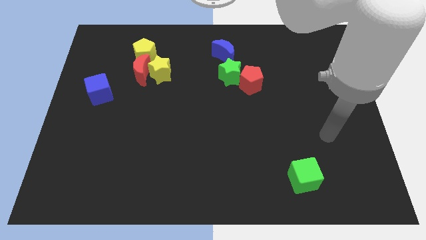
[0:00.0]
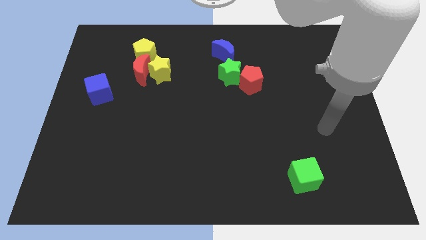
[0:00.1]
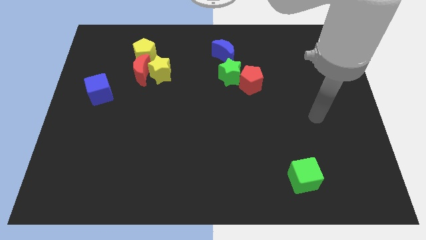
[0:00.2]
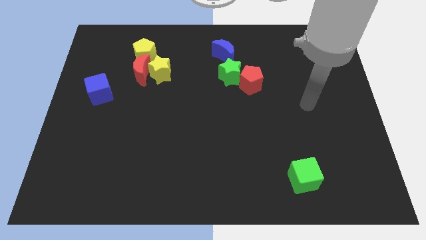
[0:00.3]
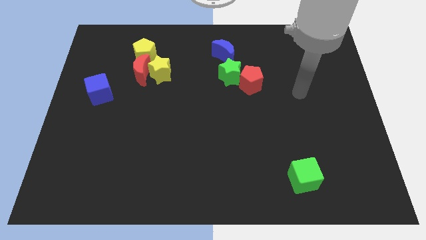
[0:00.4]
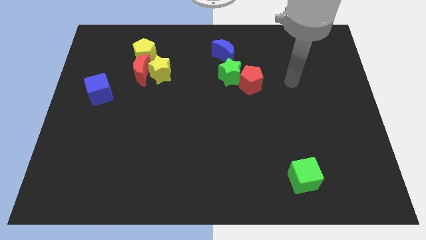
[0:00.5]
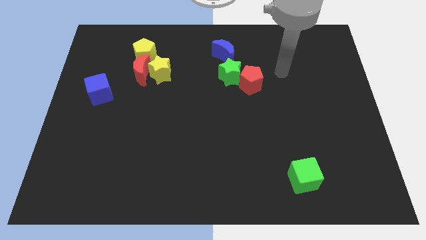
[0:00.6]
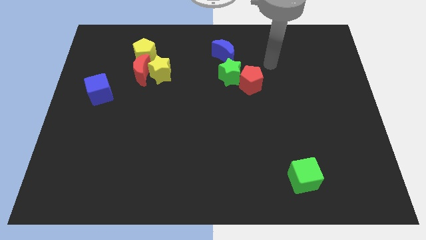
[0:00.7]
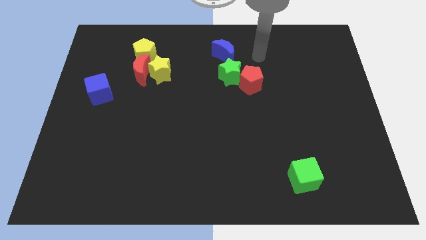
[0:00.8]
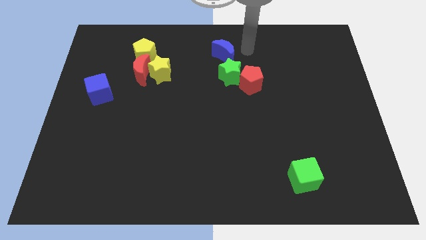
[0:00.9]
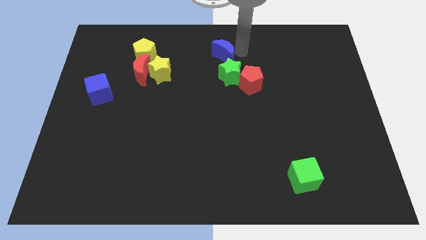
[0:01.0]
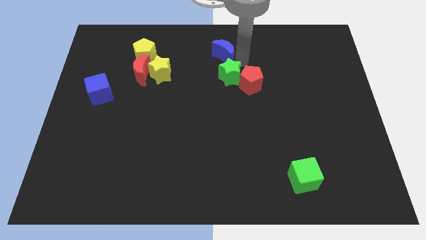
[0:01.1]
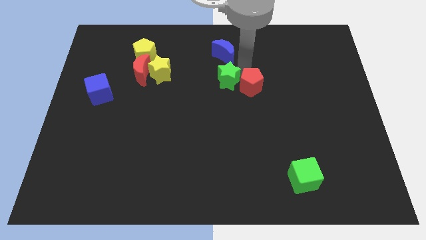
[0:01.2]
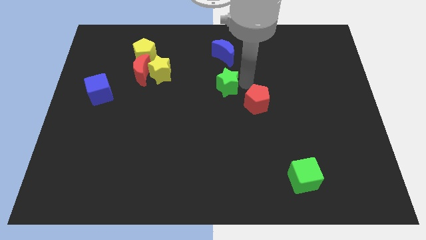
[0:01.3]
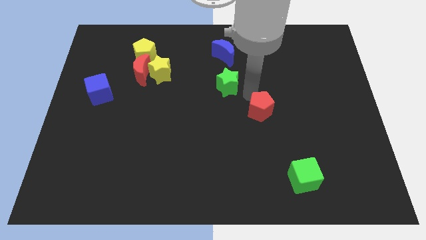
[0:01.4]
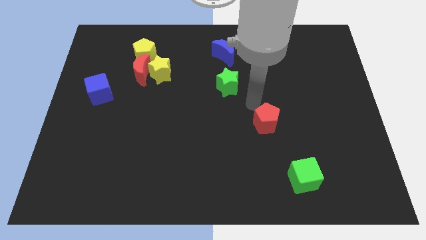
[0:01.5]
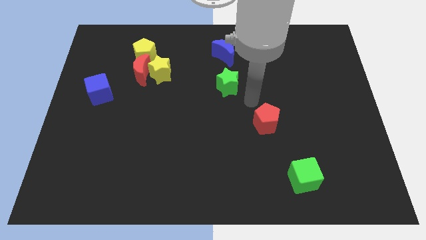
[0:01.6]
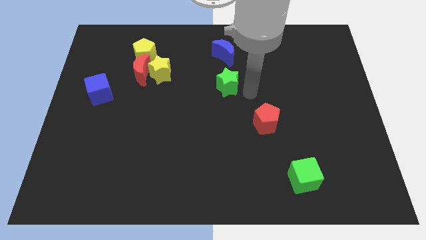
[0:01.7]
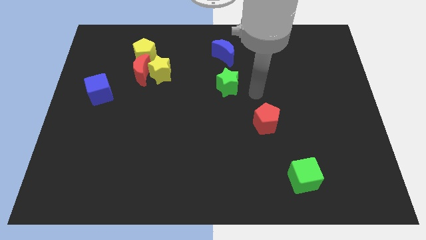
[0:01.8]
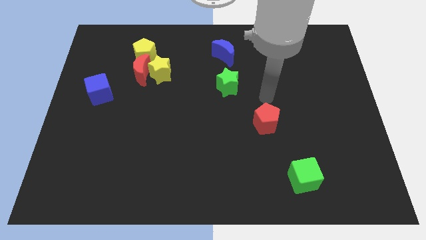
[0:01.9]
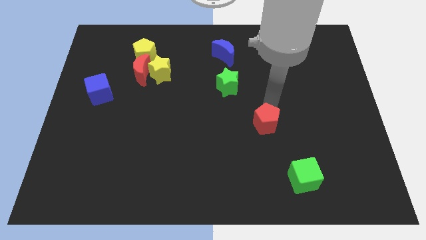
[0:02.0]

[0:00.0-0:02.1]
separate the red pentagon from the green star

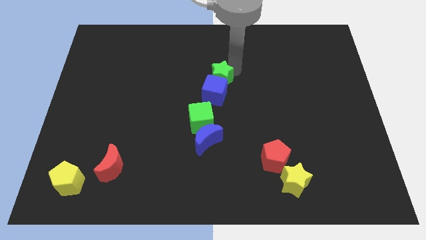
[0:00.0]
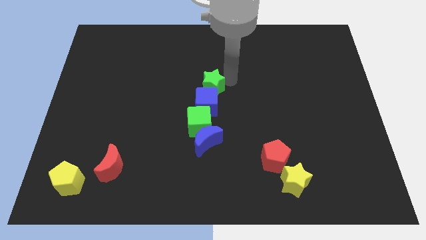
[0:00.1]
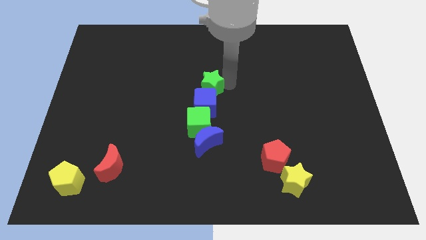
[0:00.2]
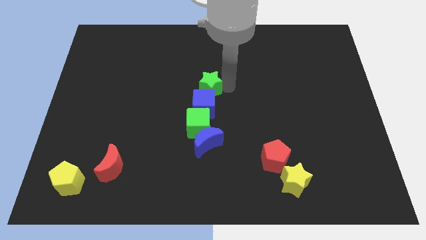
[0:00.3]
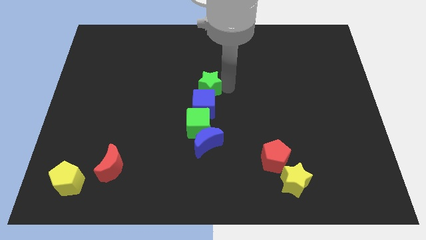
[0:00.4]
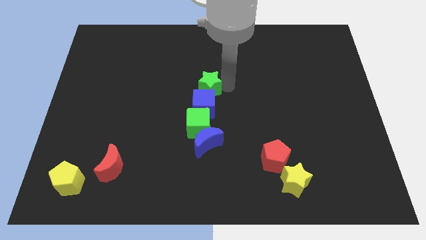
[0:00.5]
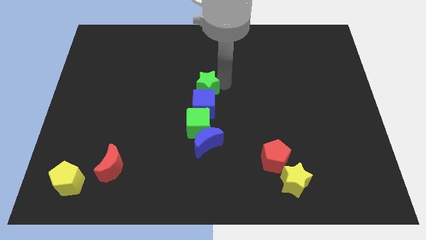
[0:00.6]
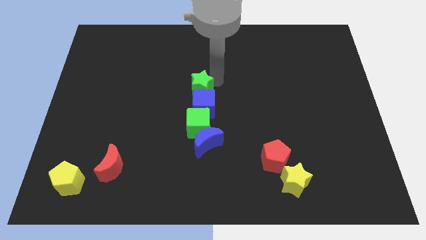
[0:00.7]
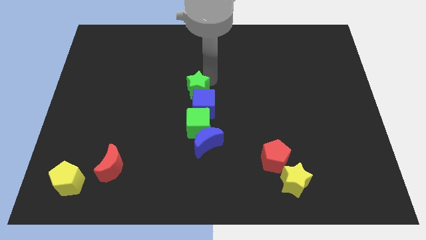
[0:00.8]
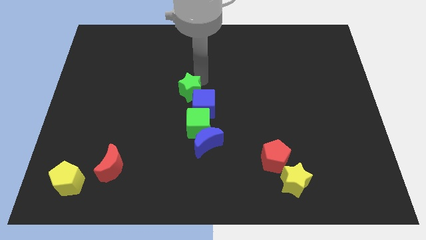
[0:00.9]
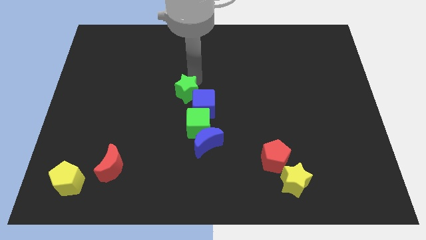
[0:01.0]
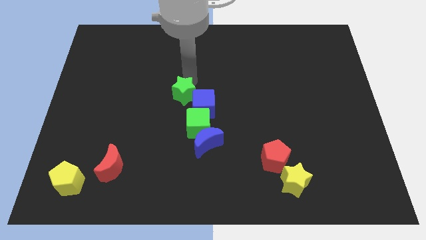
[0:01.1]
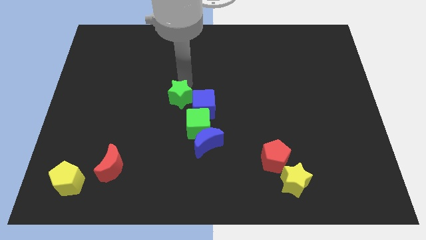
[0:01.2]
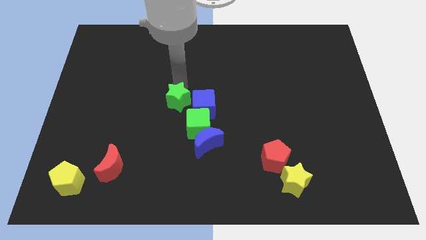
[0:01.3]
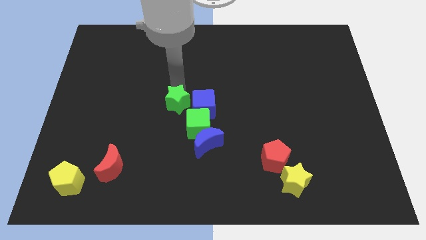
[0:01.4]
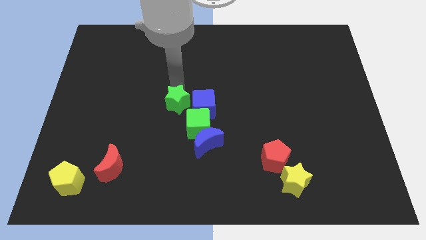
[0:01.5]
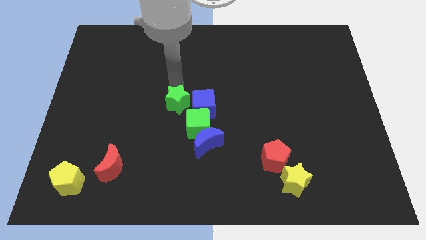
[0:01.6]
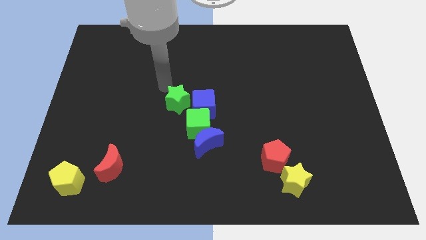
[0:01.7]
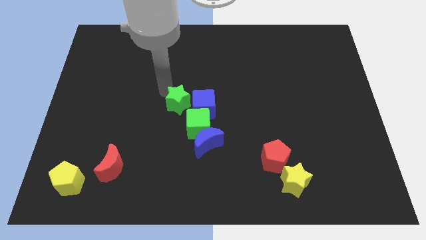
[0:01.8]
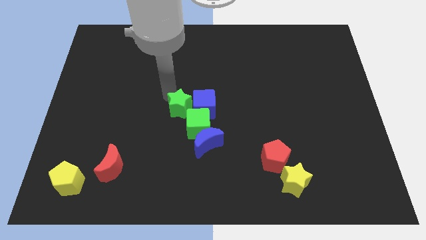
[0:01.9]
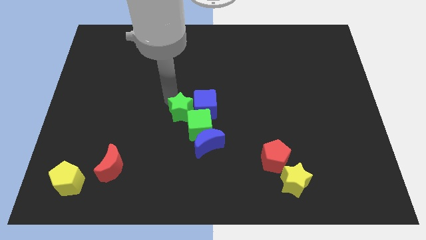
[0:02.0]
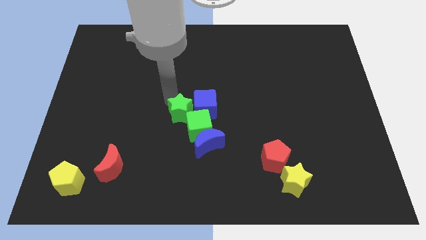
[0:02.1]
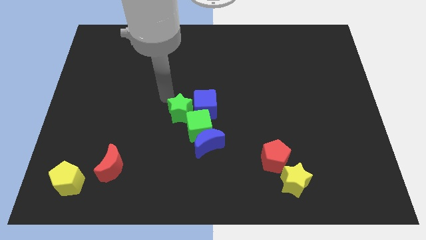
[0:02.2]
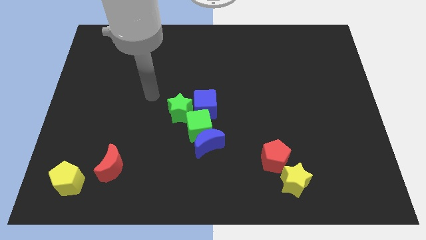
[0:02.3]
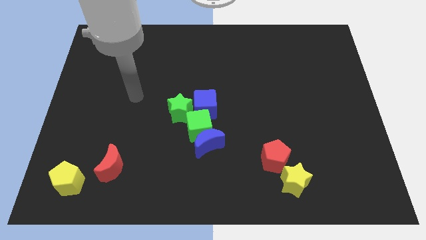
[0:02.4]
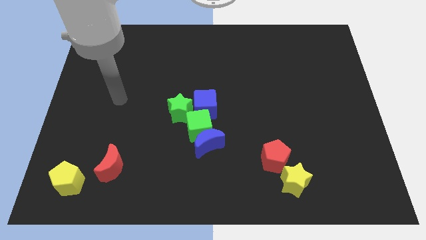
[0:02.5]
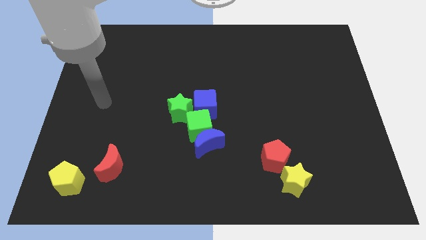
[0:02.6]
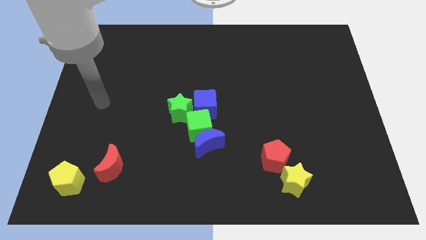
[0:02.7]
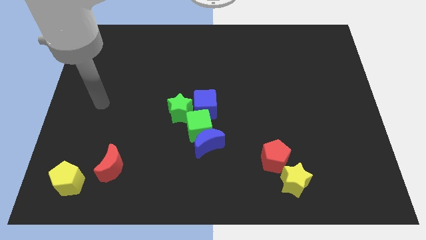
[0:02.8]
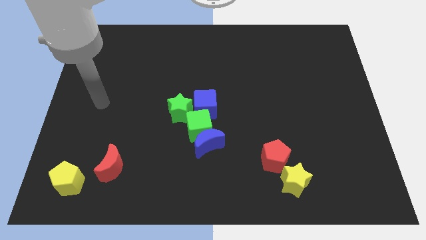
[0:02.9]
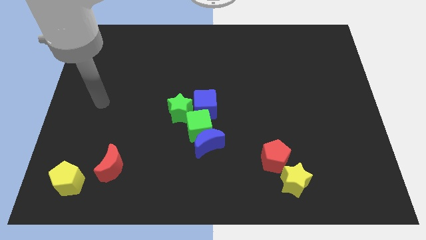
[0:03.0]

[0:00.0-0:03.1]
move green star to the left of blue cube

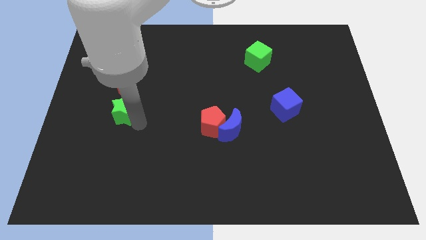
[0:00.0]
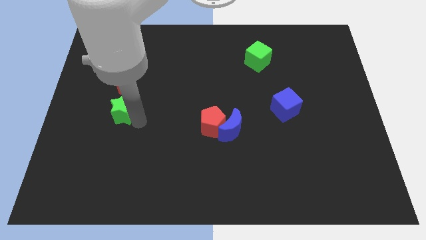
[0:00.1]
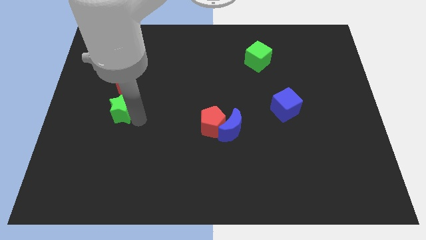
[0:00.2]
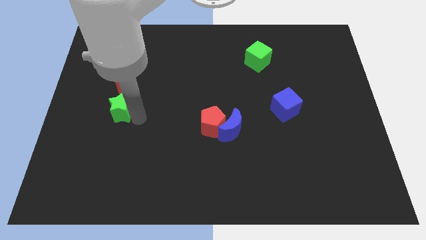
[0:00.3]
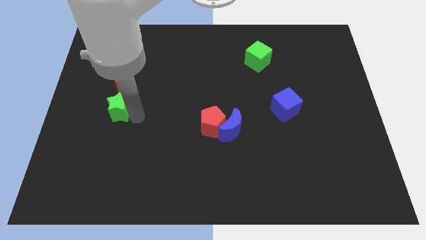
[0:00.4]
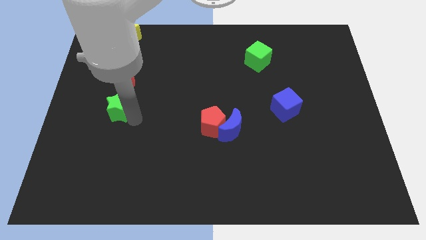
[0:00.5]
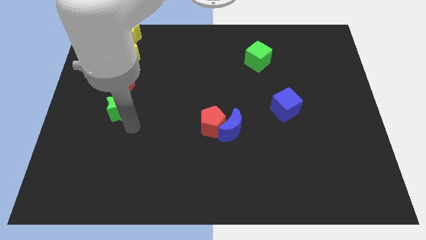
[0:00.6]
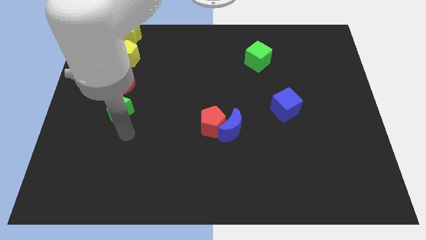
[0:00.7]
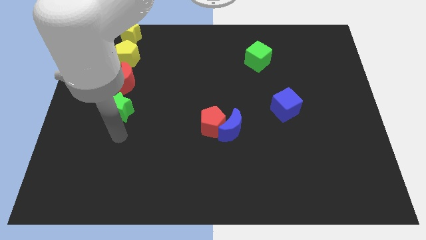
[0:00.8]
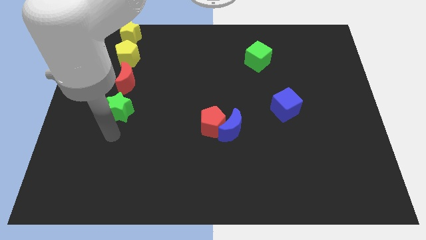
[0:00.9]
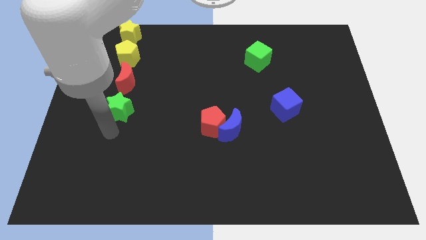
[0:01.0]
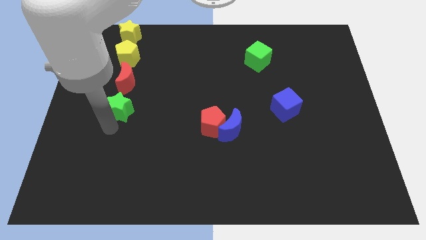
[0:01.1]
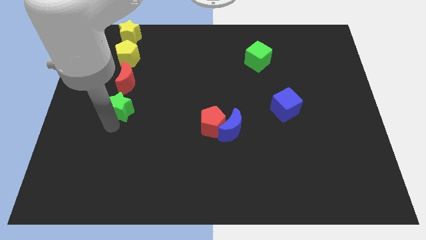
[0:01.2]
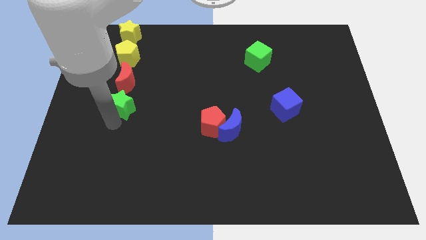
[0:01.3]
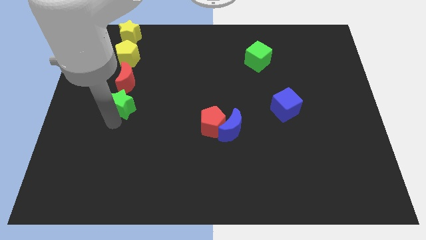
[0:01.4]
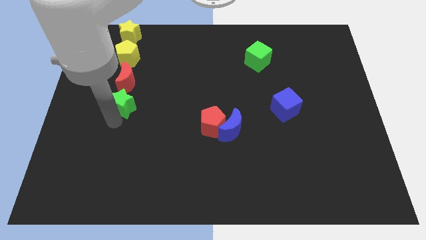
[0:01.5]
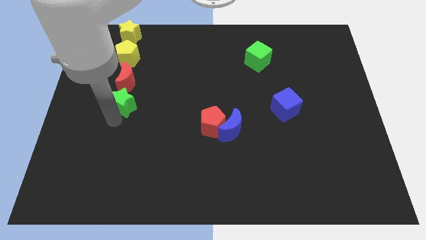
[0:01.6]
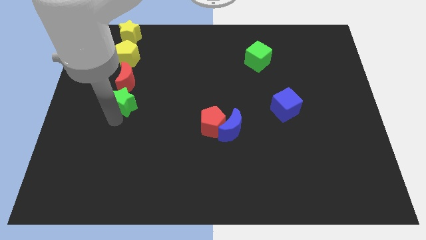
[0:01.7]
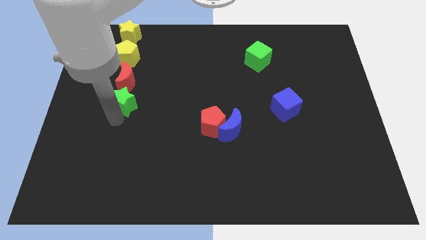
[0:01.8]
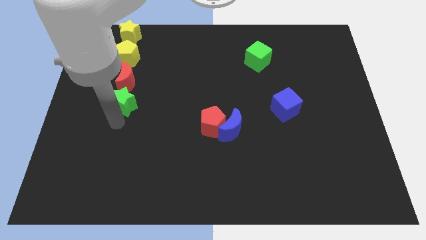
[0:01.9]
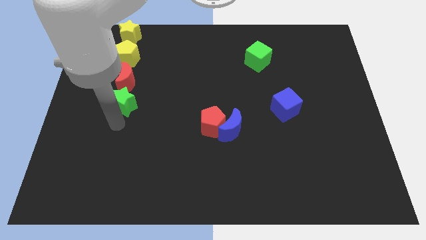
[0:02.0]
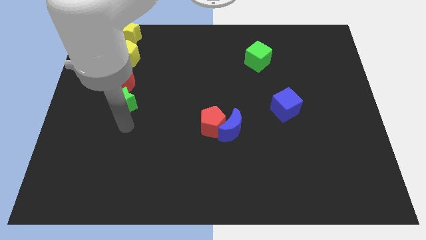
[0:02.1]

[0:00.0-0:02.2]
push green star into red moon

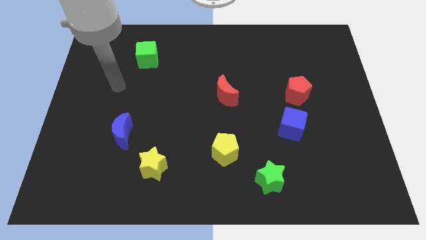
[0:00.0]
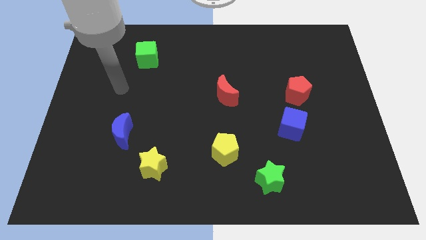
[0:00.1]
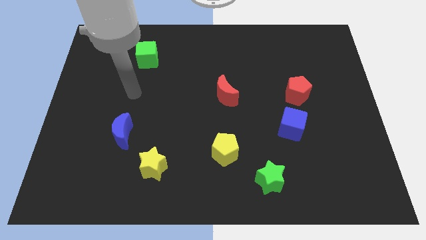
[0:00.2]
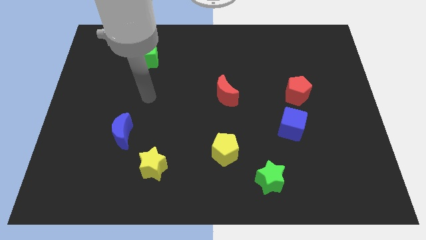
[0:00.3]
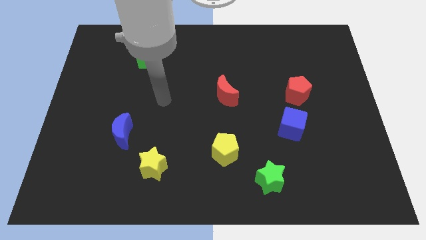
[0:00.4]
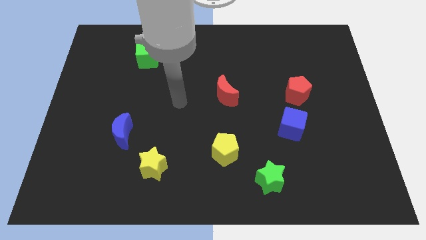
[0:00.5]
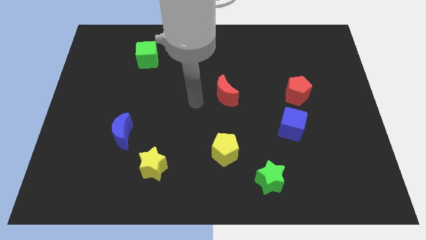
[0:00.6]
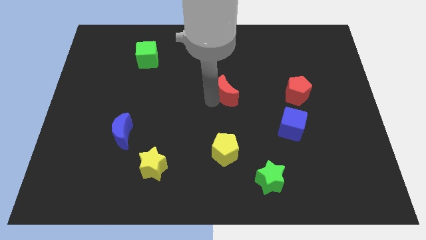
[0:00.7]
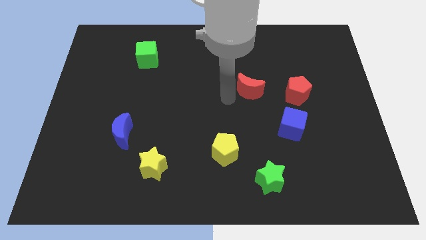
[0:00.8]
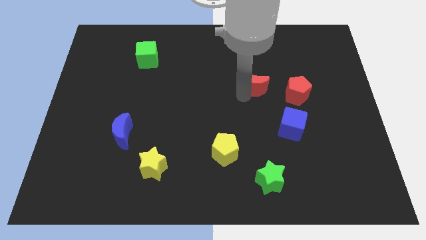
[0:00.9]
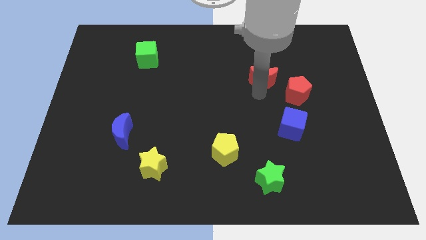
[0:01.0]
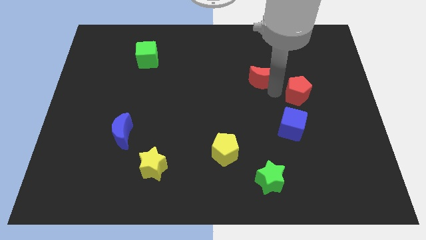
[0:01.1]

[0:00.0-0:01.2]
slide the red crescent diagonally top right to the red pentagon

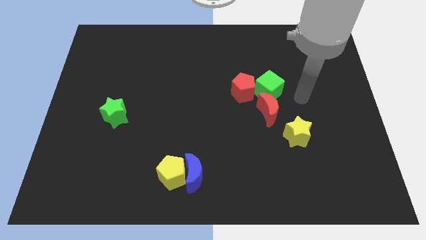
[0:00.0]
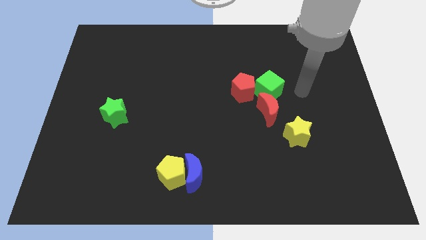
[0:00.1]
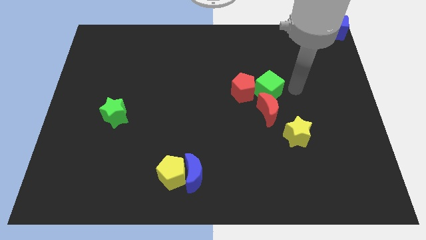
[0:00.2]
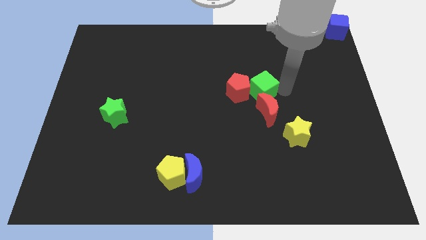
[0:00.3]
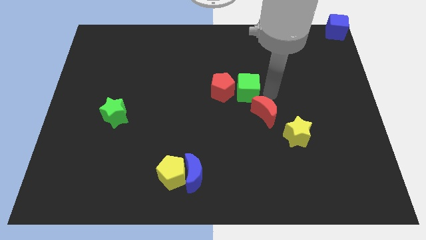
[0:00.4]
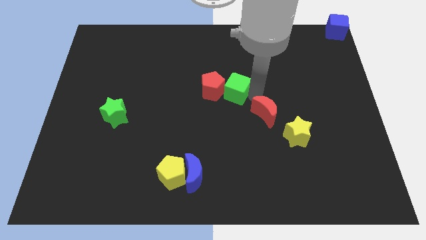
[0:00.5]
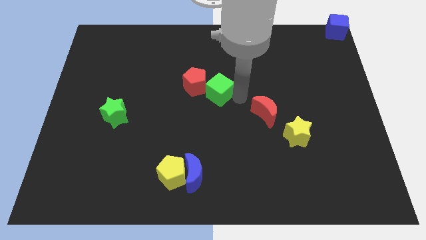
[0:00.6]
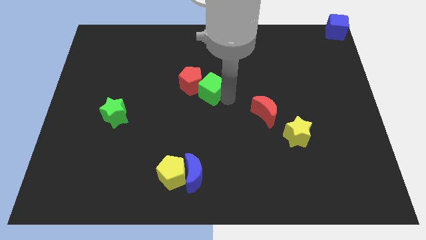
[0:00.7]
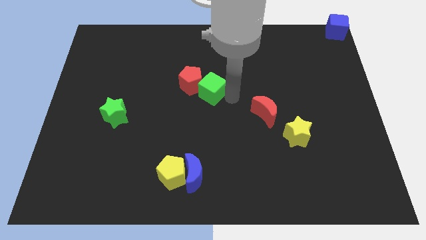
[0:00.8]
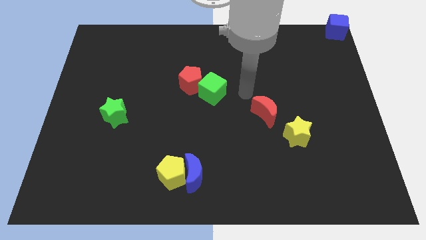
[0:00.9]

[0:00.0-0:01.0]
place the green cube and red pentagon at the center of the board
